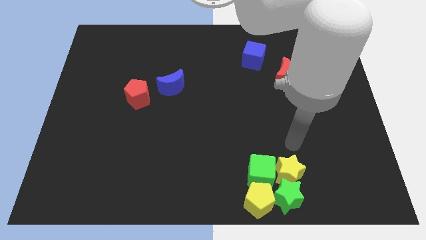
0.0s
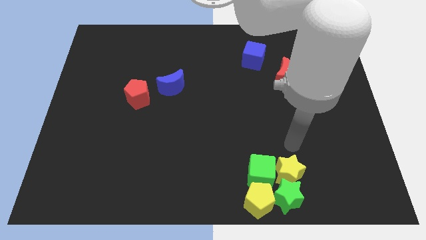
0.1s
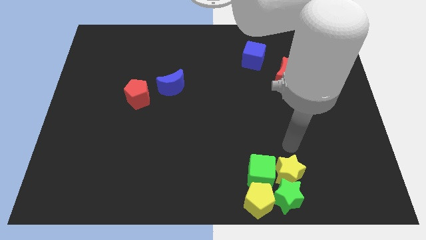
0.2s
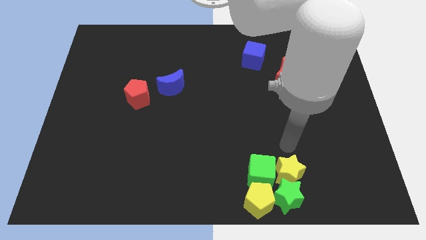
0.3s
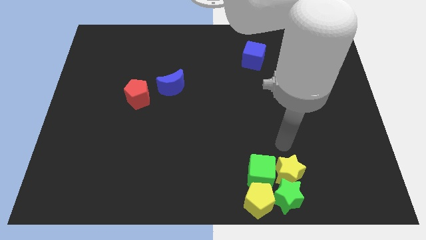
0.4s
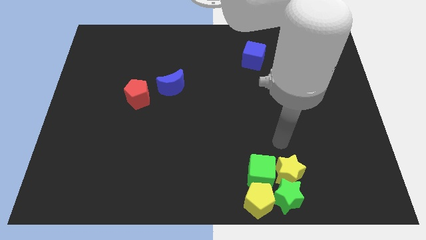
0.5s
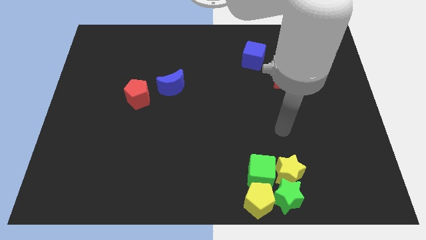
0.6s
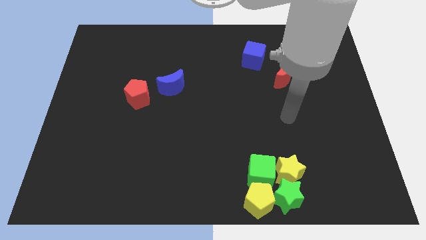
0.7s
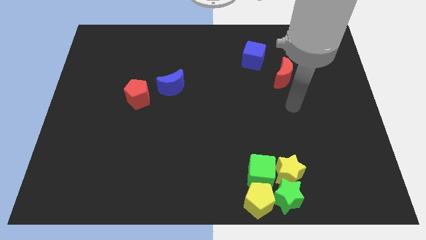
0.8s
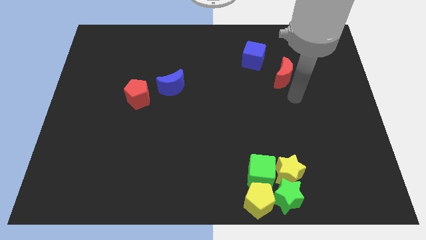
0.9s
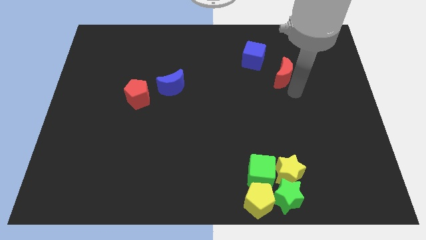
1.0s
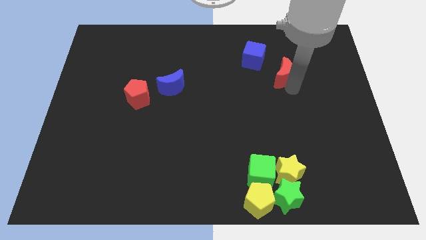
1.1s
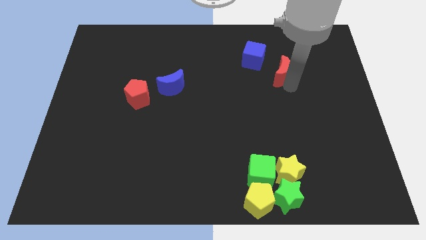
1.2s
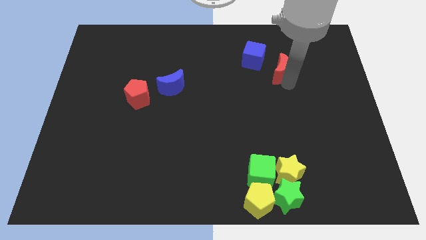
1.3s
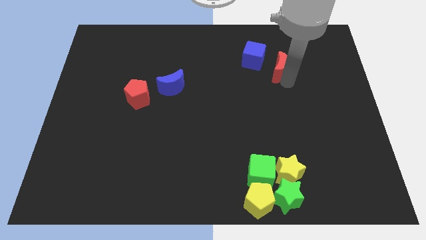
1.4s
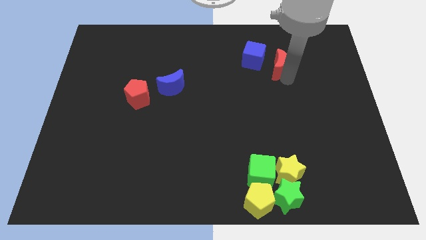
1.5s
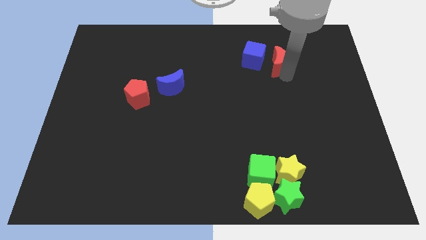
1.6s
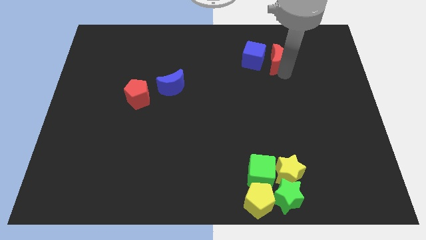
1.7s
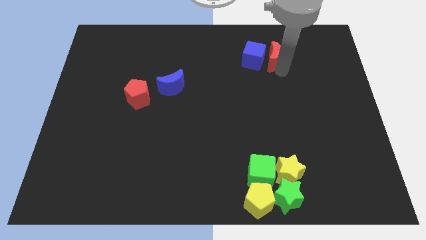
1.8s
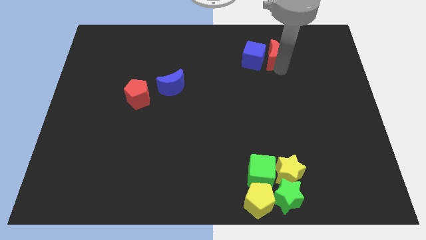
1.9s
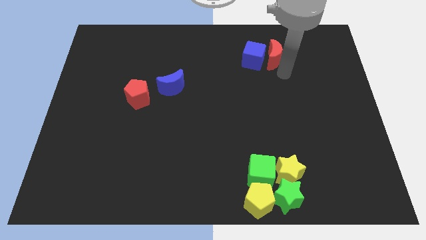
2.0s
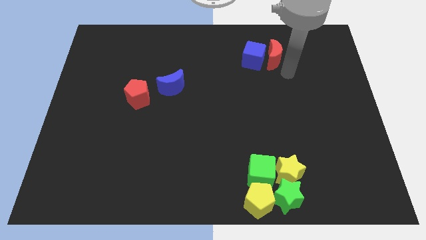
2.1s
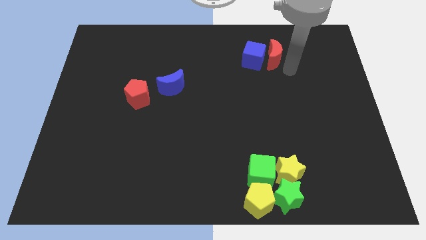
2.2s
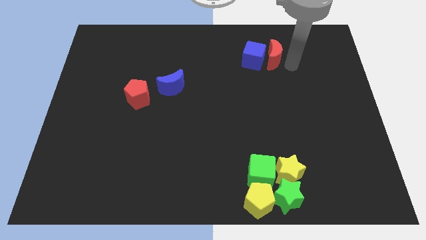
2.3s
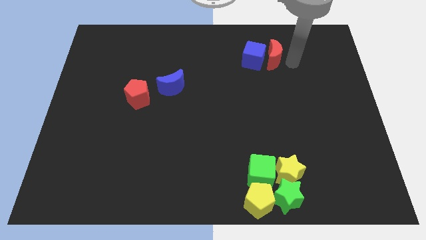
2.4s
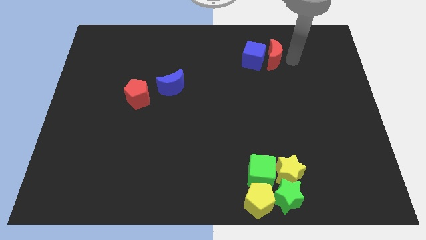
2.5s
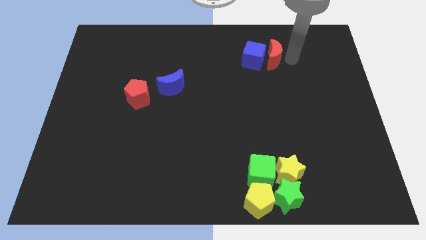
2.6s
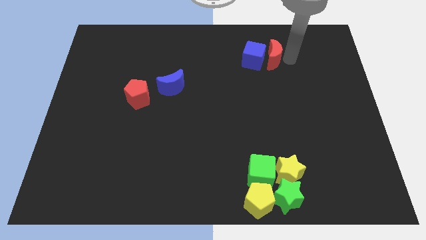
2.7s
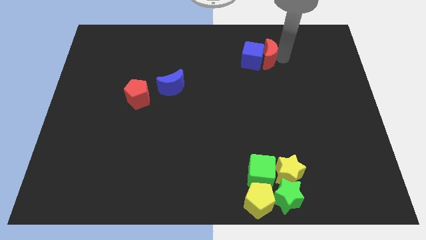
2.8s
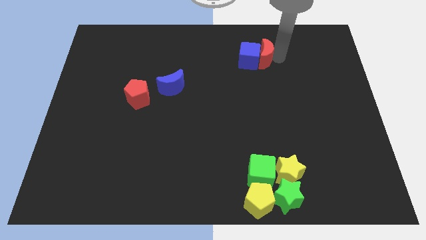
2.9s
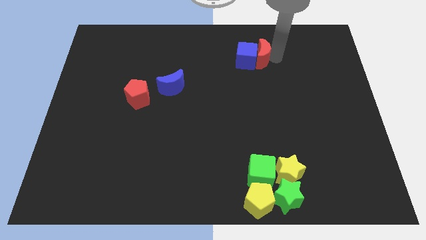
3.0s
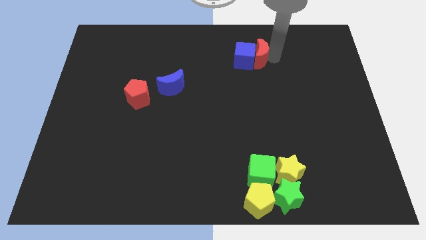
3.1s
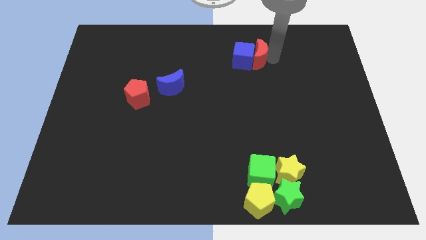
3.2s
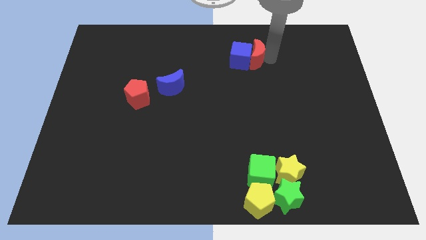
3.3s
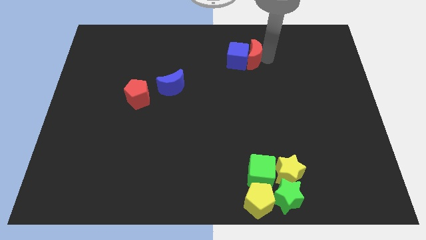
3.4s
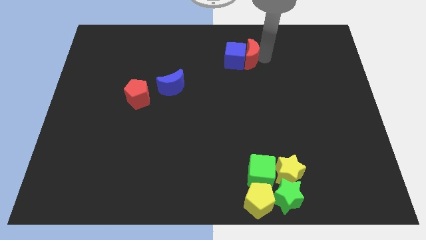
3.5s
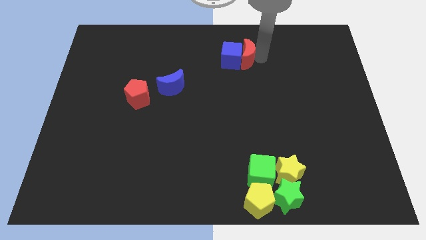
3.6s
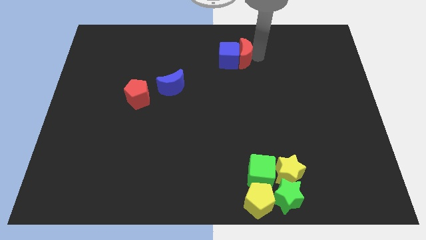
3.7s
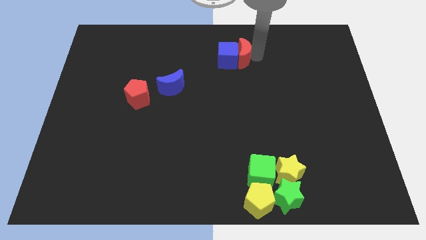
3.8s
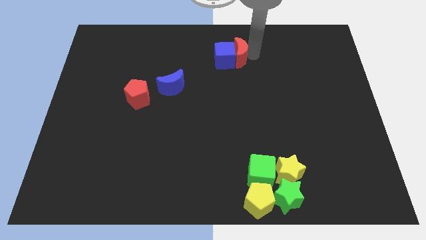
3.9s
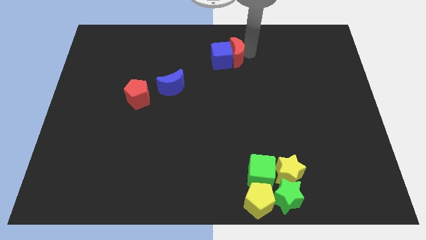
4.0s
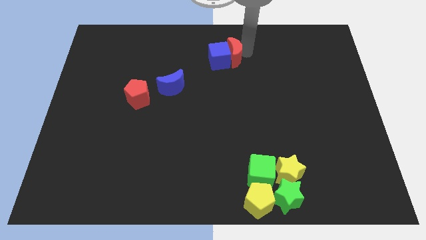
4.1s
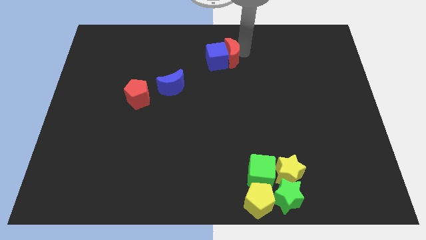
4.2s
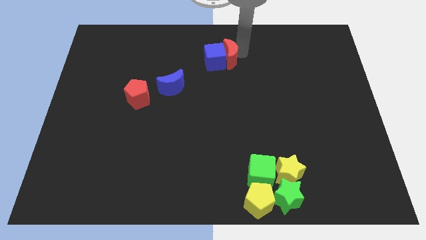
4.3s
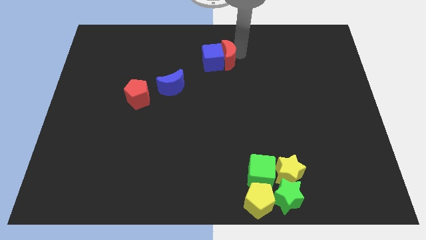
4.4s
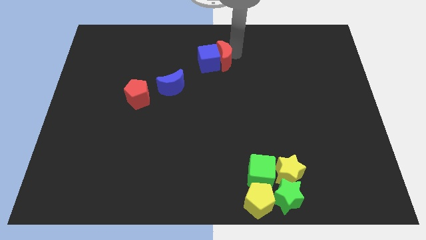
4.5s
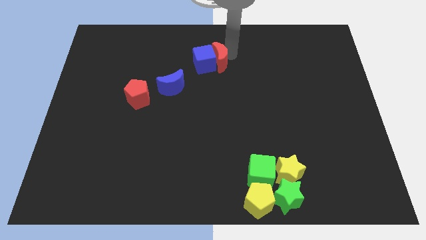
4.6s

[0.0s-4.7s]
move the blue cube and red crescent together to the top right of the blue crescent

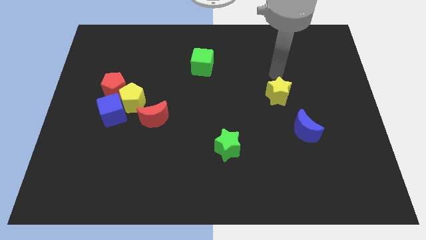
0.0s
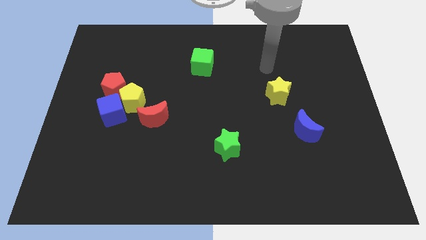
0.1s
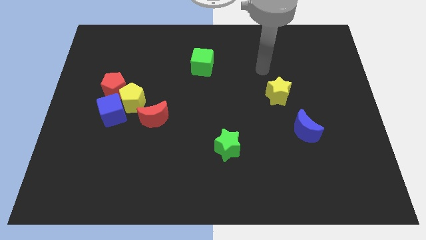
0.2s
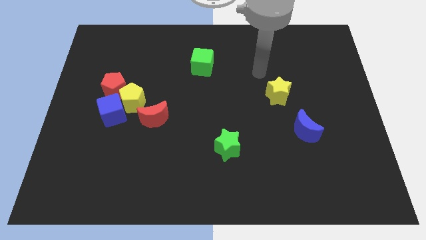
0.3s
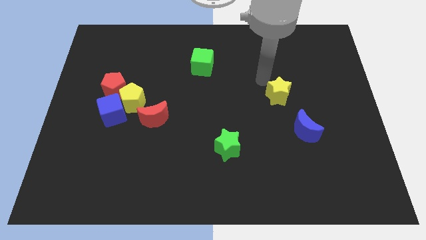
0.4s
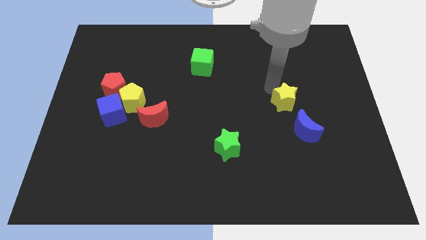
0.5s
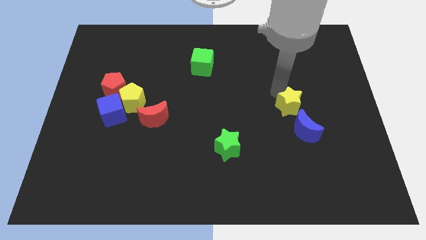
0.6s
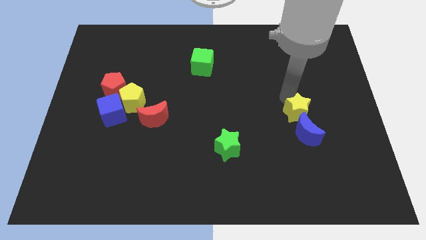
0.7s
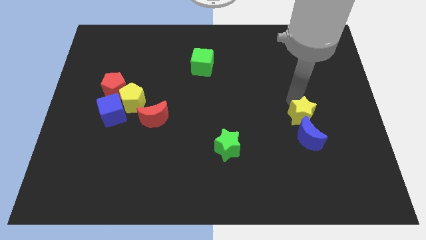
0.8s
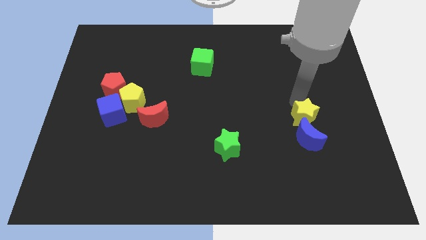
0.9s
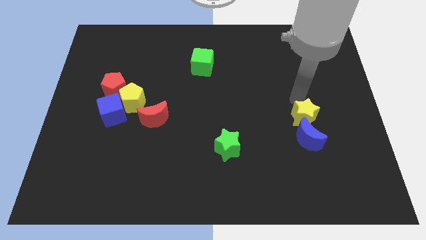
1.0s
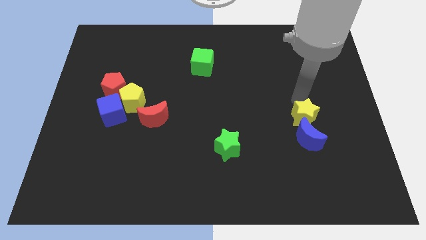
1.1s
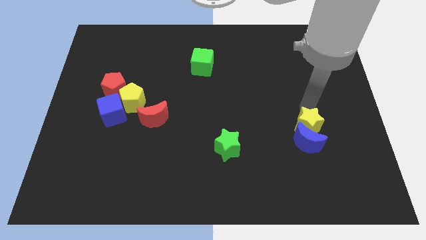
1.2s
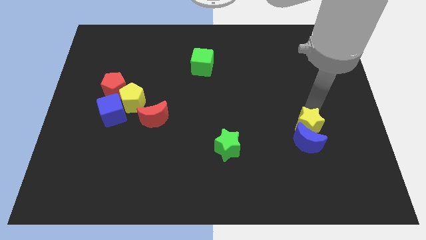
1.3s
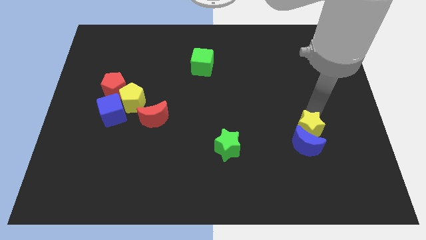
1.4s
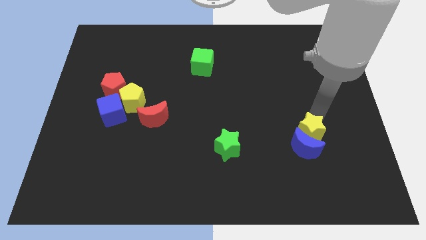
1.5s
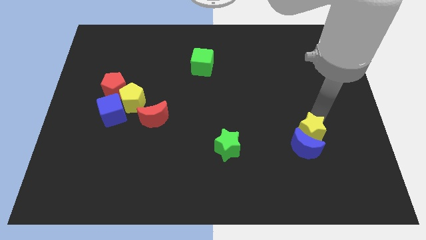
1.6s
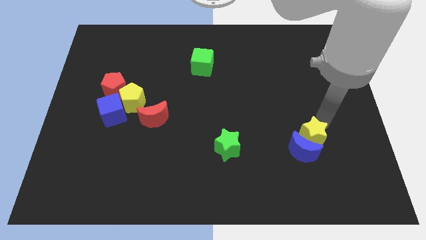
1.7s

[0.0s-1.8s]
push the yellow star into the blue moon

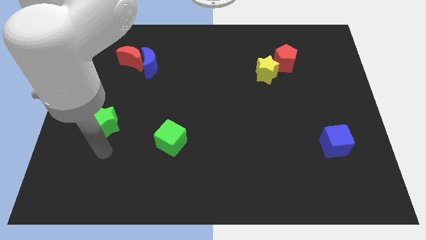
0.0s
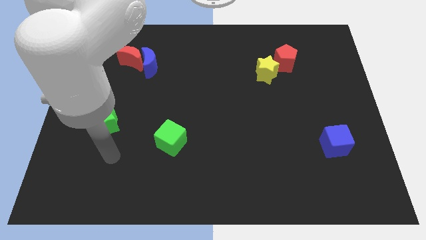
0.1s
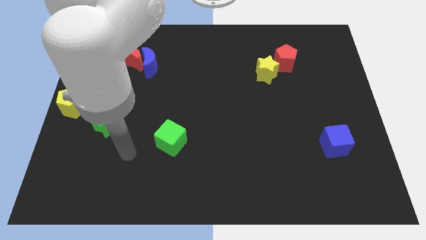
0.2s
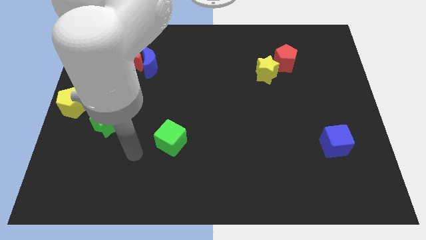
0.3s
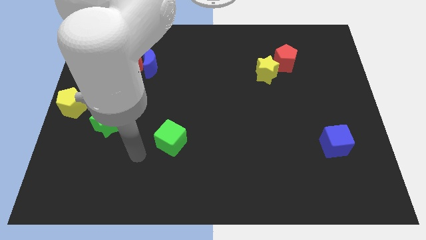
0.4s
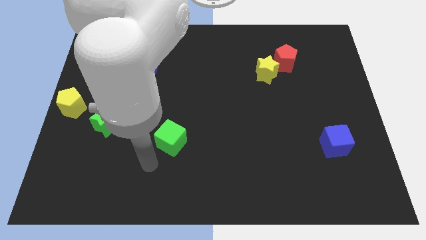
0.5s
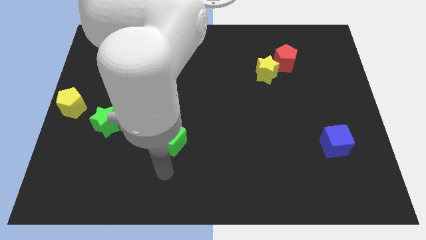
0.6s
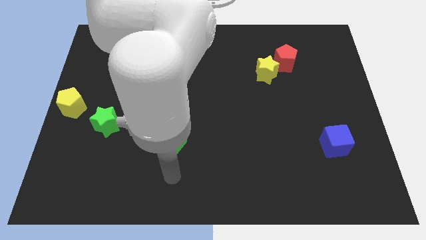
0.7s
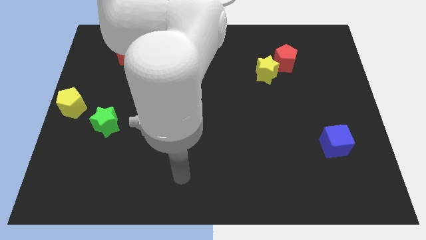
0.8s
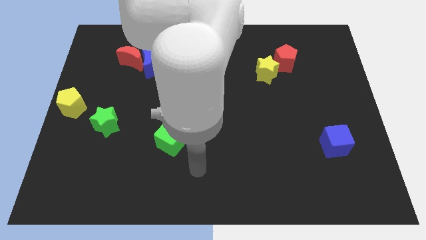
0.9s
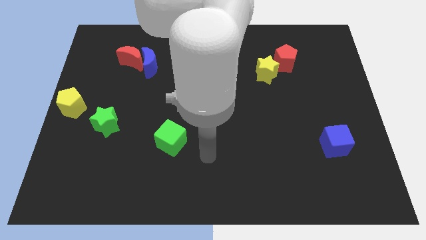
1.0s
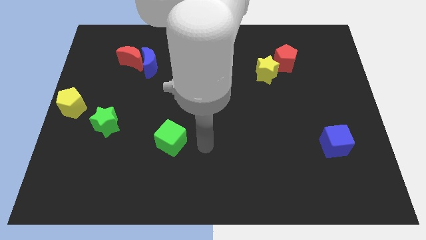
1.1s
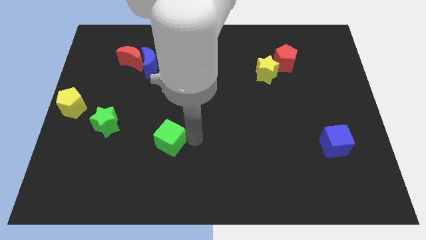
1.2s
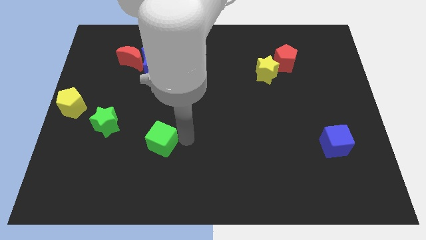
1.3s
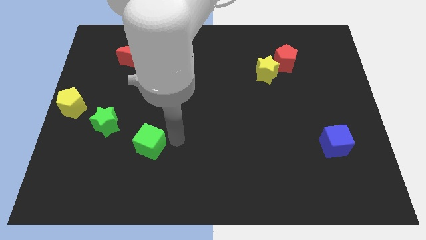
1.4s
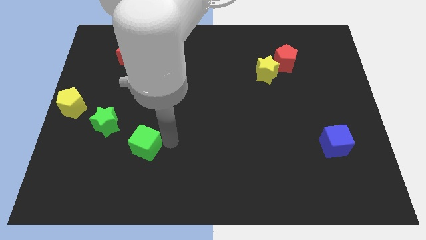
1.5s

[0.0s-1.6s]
slide the green cube diagonal to the green star

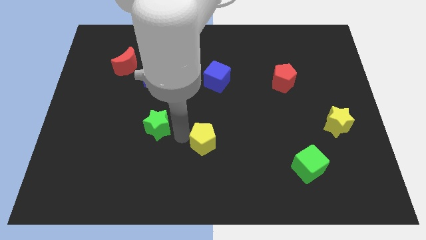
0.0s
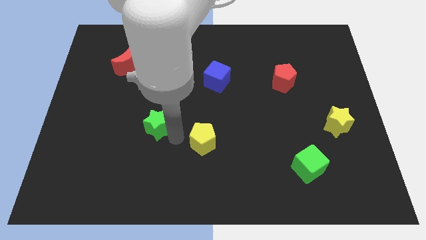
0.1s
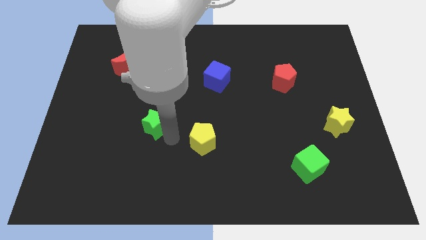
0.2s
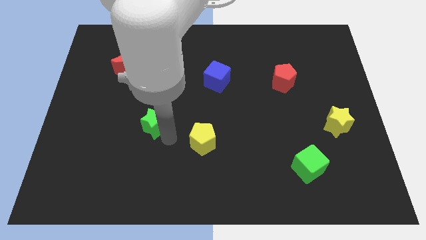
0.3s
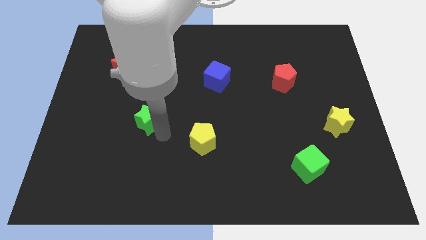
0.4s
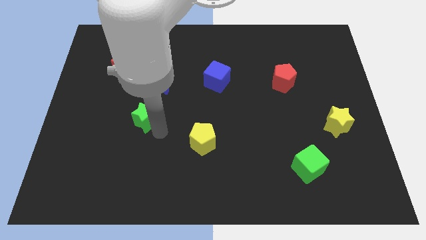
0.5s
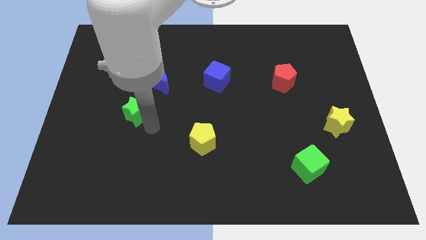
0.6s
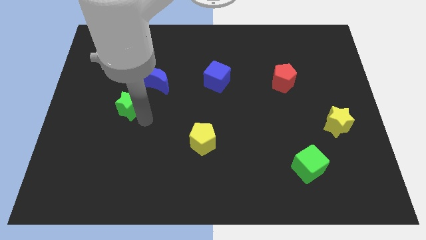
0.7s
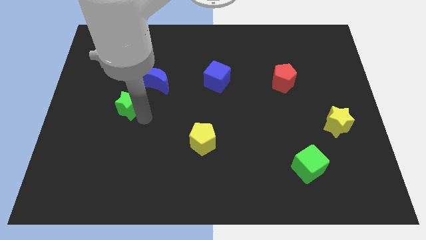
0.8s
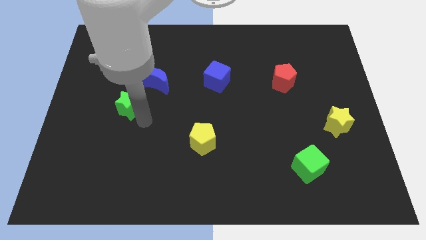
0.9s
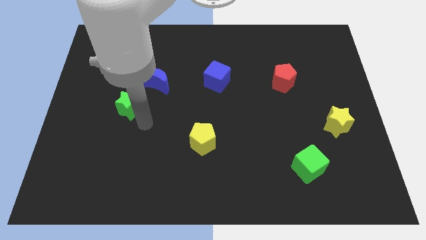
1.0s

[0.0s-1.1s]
put the green star diagonally below blue moon

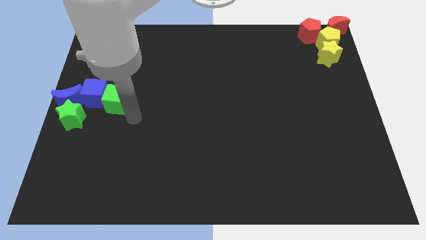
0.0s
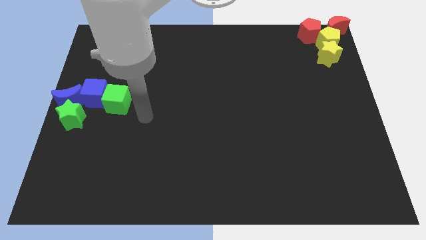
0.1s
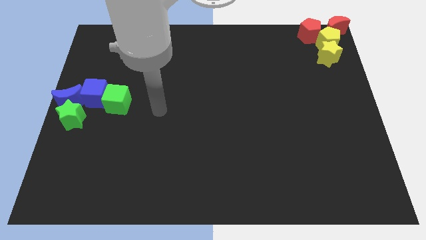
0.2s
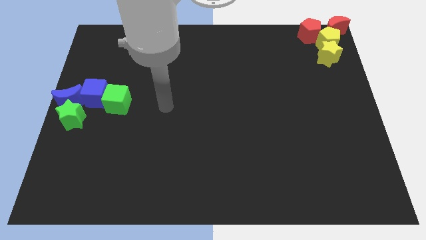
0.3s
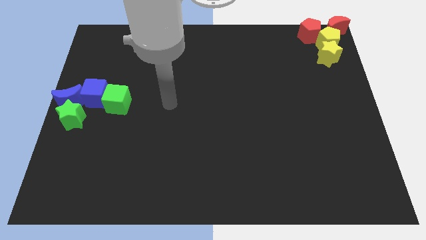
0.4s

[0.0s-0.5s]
move the arm away from the green cube
